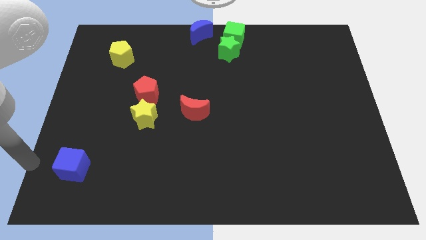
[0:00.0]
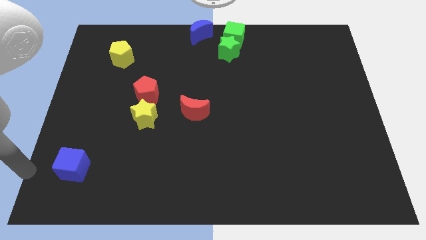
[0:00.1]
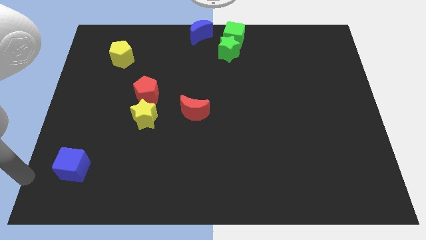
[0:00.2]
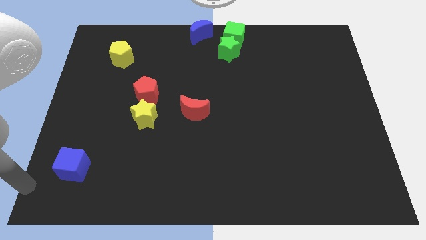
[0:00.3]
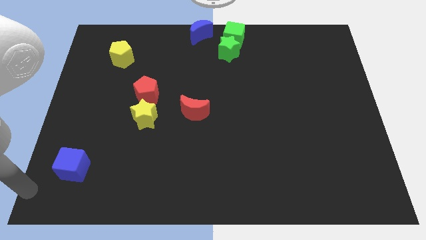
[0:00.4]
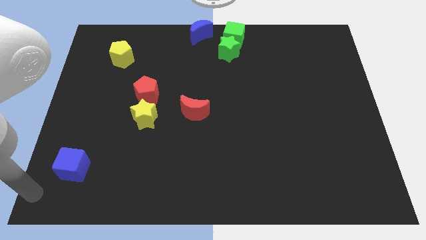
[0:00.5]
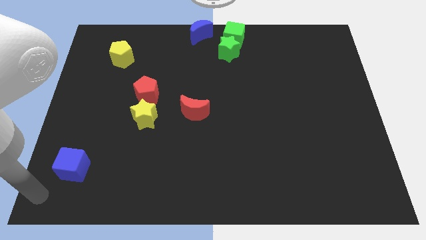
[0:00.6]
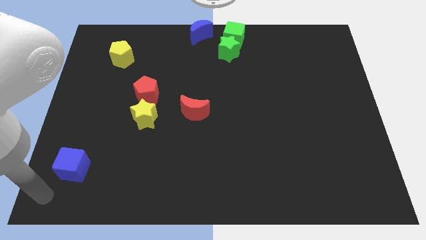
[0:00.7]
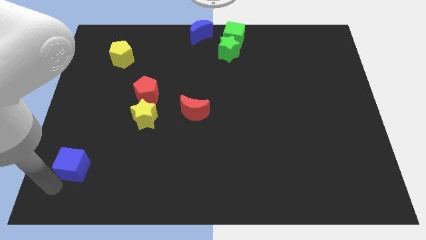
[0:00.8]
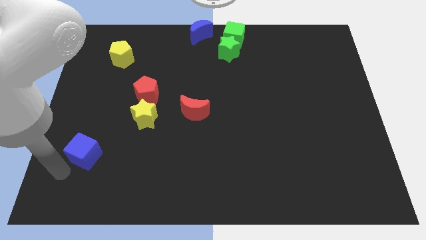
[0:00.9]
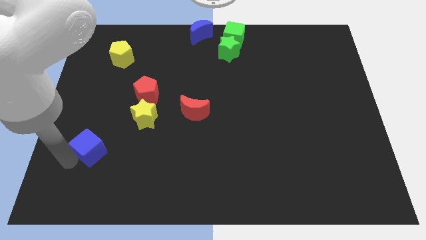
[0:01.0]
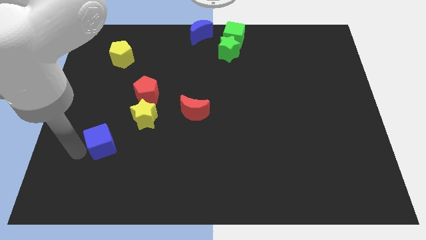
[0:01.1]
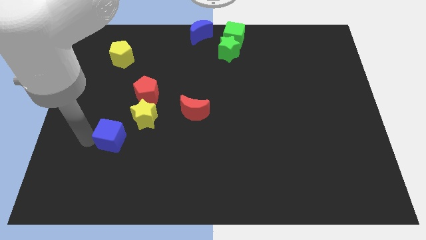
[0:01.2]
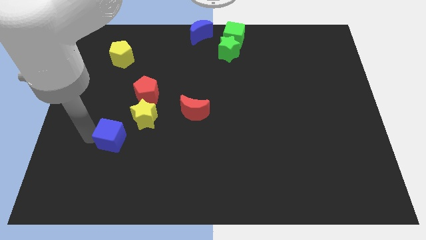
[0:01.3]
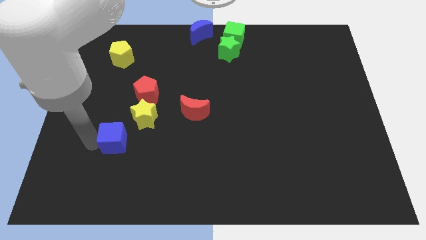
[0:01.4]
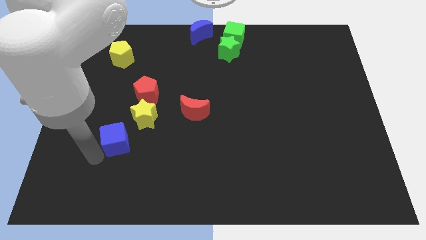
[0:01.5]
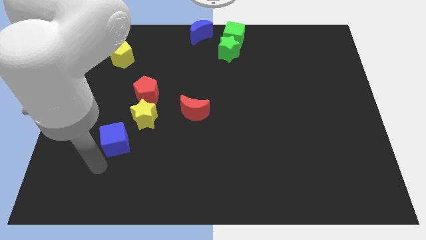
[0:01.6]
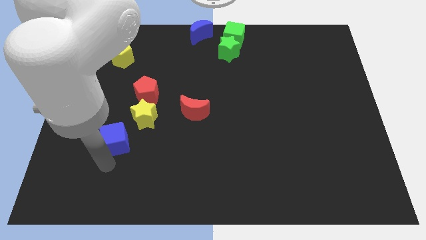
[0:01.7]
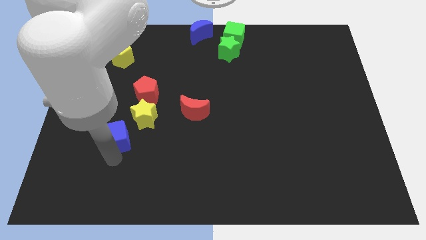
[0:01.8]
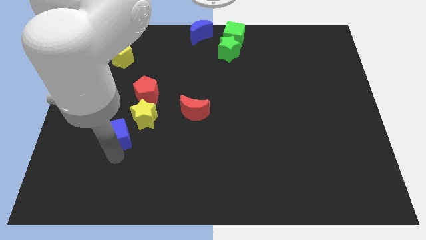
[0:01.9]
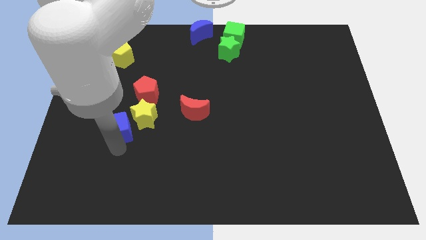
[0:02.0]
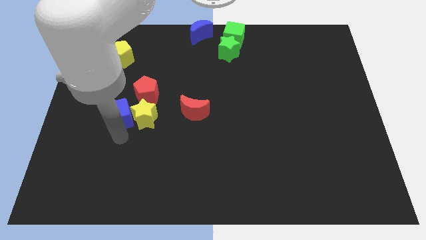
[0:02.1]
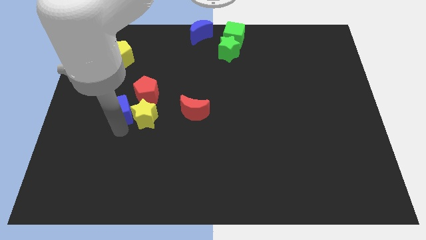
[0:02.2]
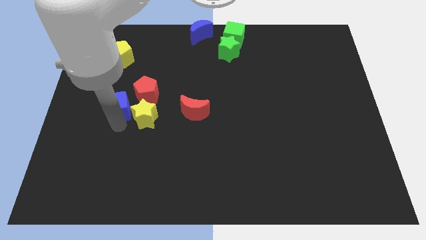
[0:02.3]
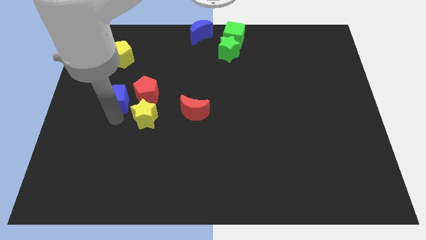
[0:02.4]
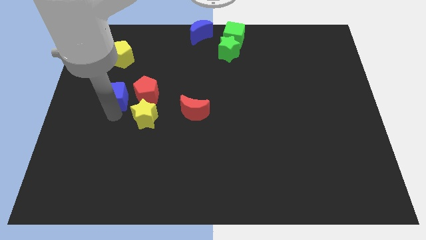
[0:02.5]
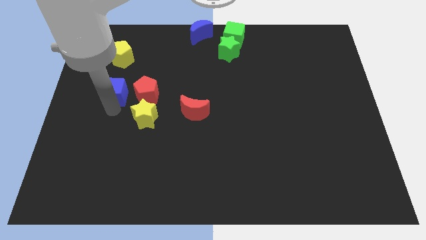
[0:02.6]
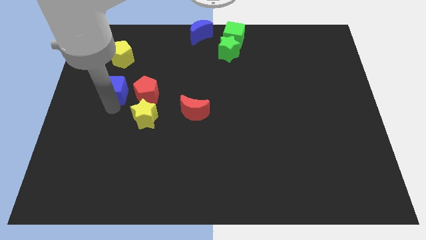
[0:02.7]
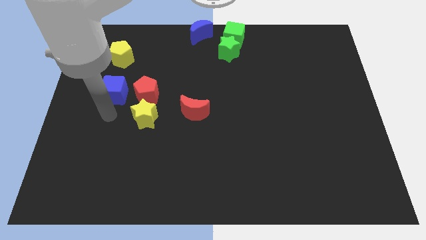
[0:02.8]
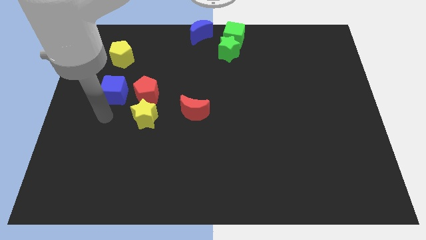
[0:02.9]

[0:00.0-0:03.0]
move the blue cube to the left of the red pentagon

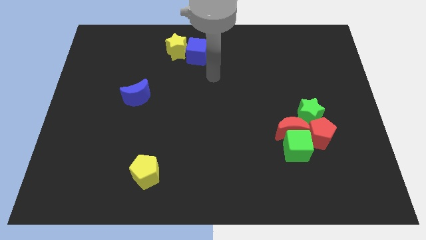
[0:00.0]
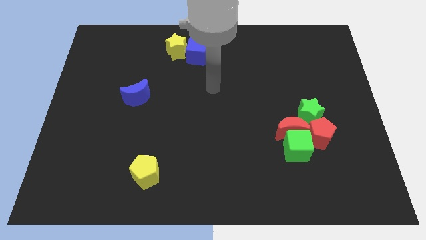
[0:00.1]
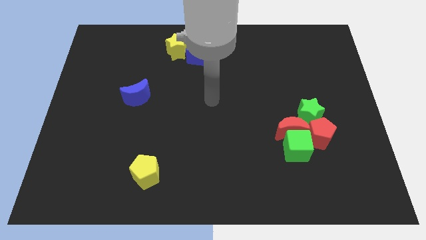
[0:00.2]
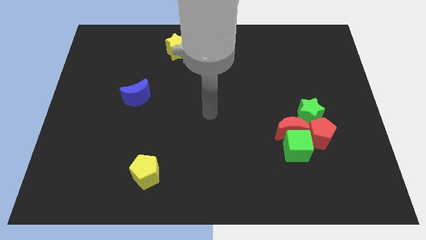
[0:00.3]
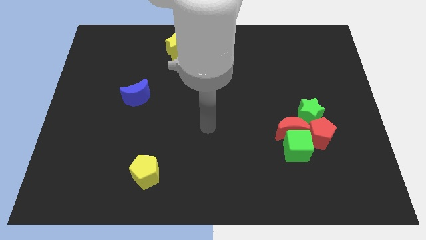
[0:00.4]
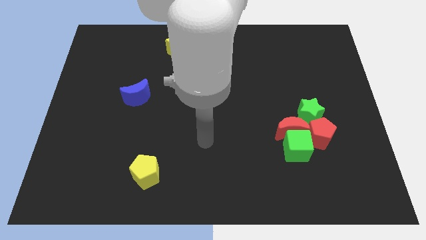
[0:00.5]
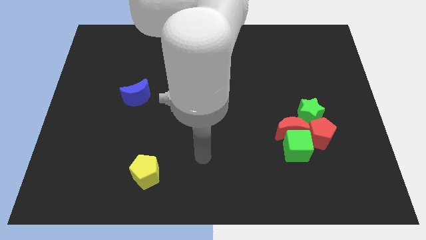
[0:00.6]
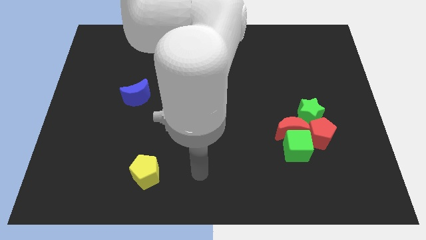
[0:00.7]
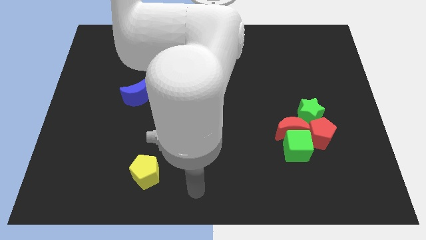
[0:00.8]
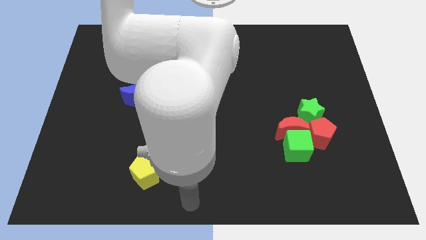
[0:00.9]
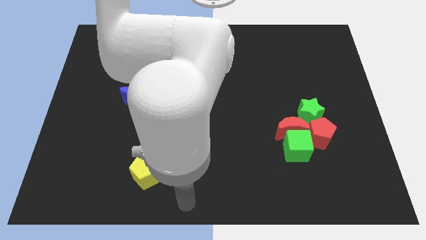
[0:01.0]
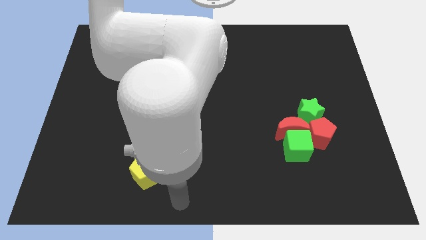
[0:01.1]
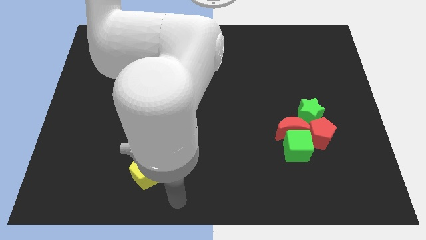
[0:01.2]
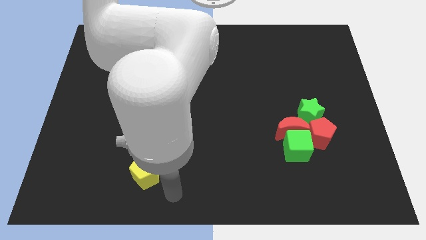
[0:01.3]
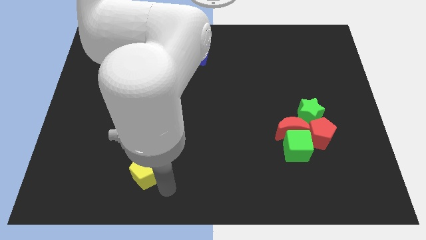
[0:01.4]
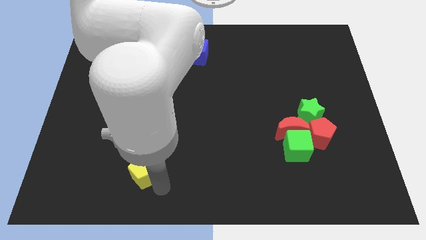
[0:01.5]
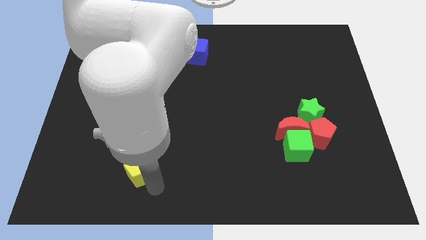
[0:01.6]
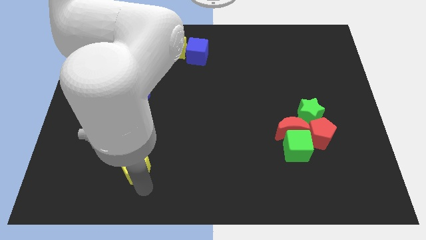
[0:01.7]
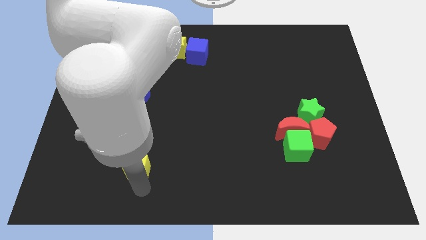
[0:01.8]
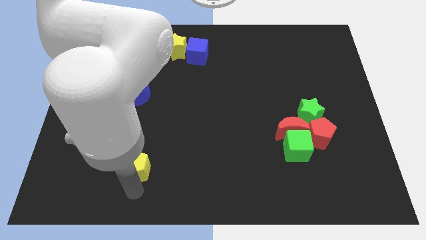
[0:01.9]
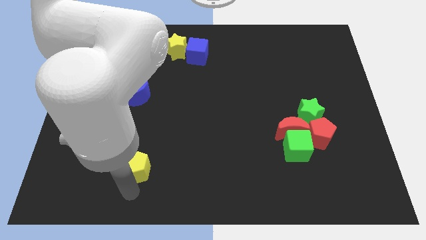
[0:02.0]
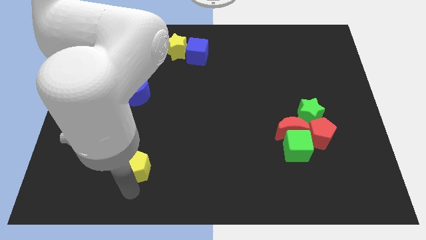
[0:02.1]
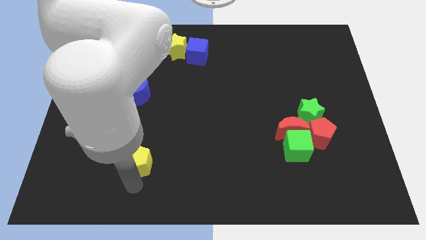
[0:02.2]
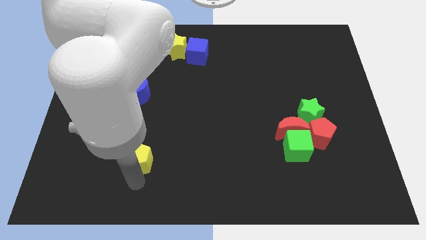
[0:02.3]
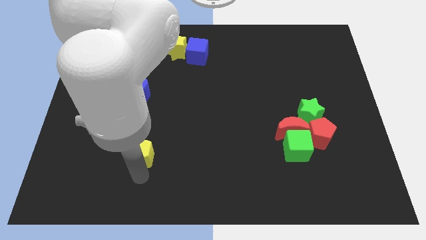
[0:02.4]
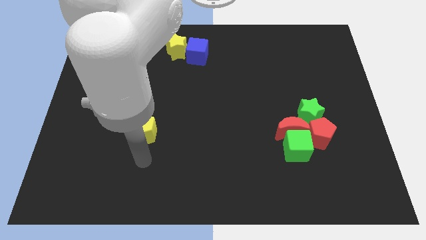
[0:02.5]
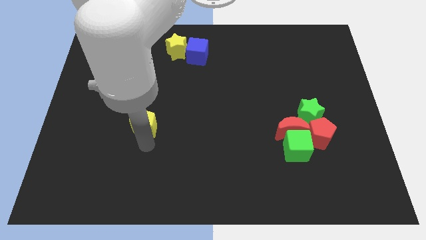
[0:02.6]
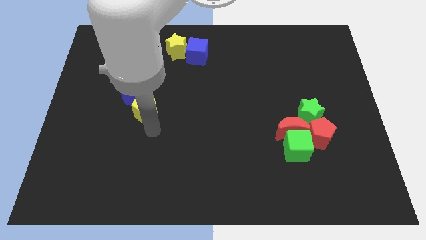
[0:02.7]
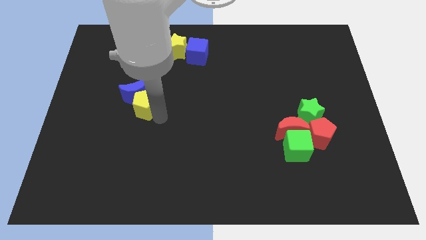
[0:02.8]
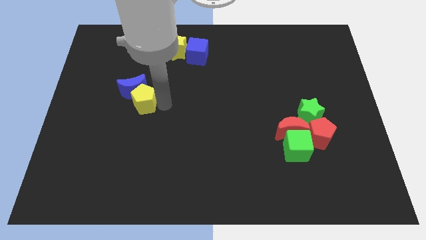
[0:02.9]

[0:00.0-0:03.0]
push the yellow pentagon into the blue moon

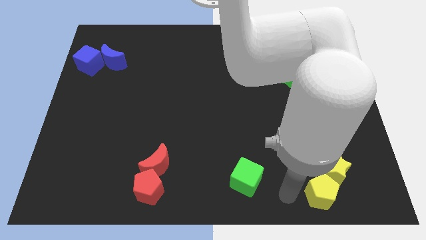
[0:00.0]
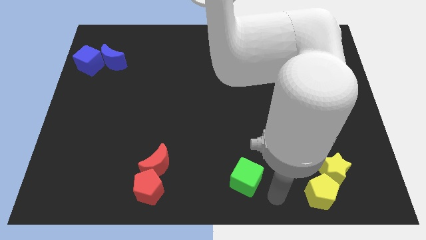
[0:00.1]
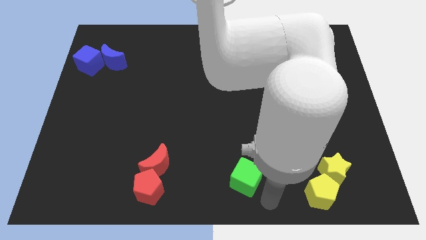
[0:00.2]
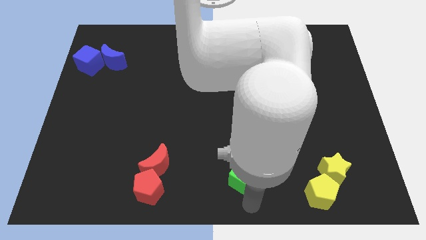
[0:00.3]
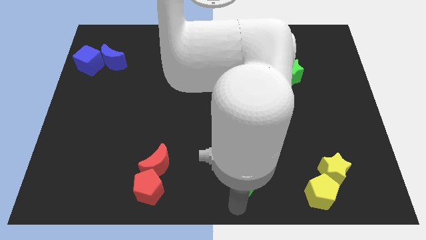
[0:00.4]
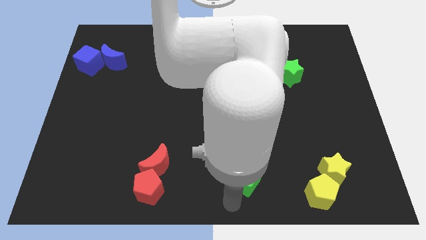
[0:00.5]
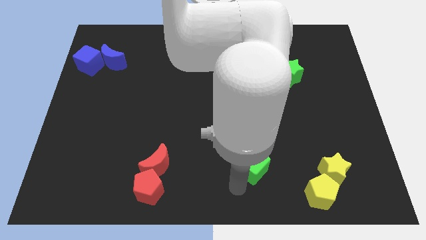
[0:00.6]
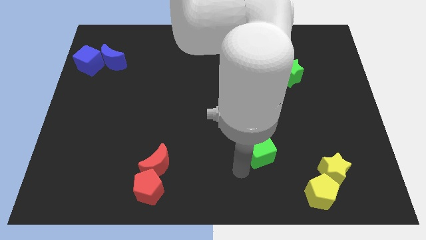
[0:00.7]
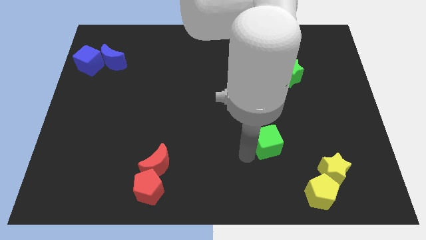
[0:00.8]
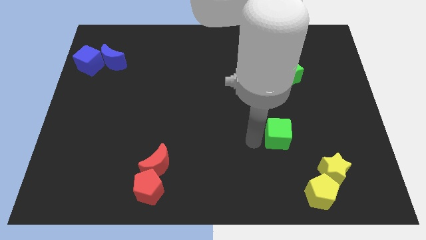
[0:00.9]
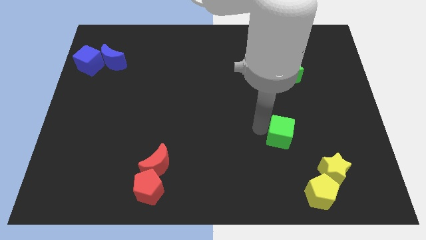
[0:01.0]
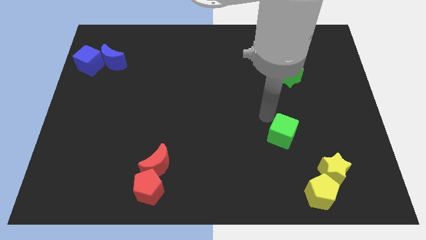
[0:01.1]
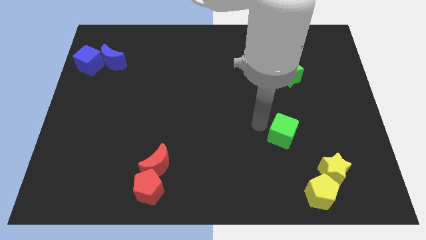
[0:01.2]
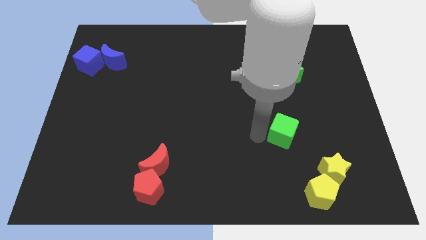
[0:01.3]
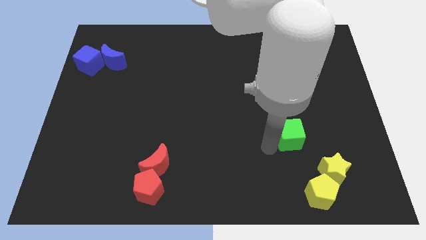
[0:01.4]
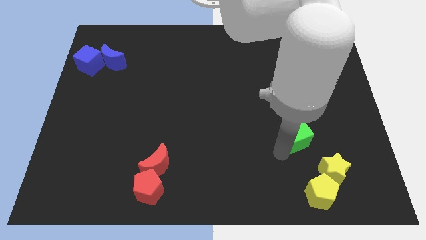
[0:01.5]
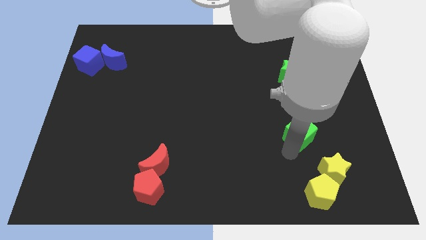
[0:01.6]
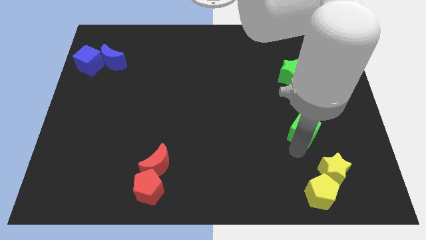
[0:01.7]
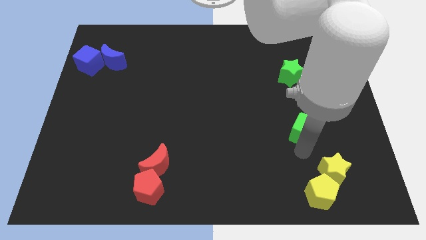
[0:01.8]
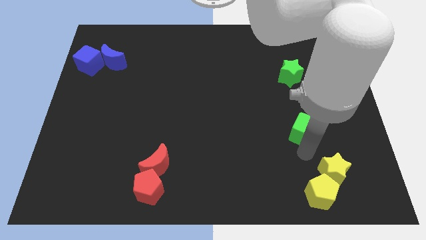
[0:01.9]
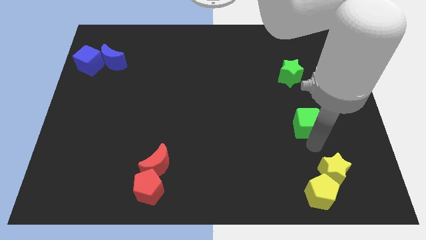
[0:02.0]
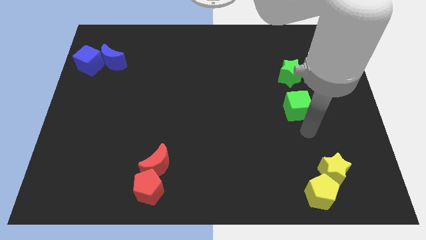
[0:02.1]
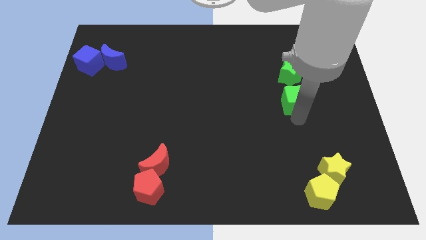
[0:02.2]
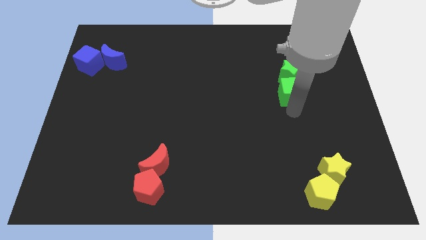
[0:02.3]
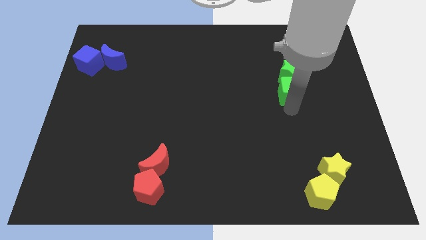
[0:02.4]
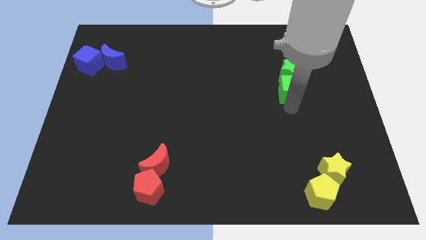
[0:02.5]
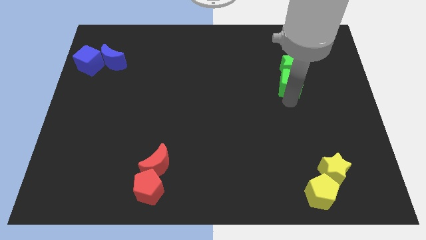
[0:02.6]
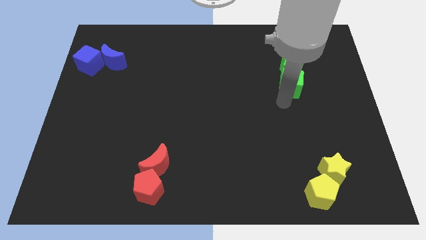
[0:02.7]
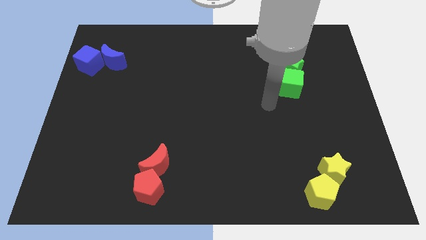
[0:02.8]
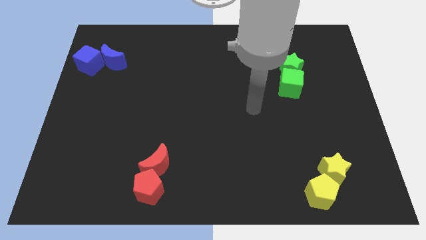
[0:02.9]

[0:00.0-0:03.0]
push the green cube into green star
